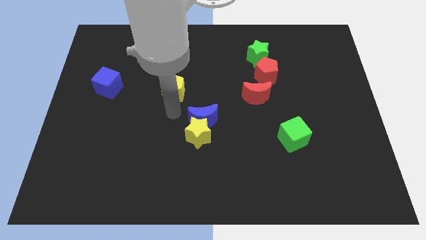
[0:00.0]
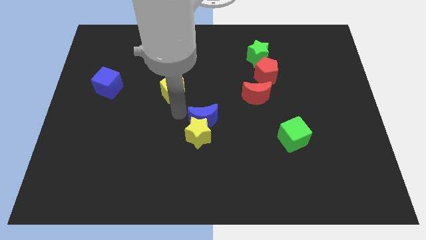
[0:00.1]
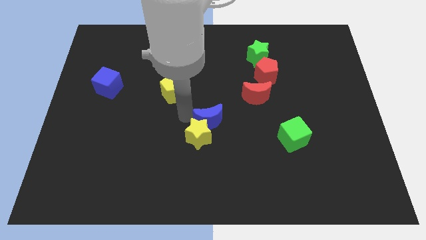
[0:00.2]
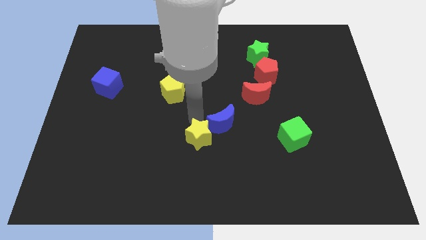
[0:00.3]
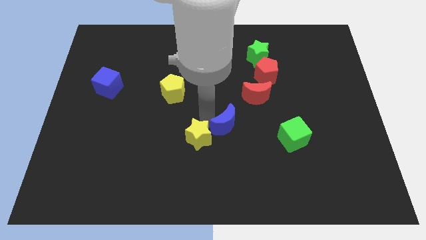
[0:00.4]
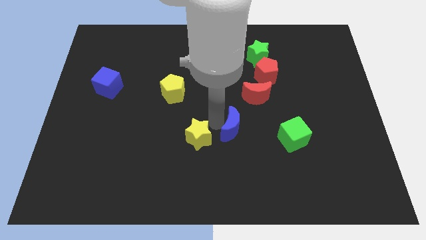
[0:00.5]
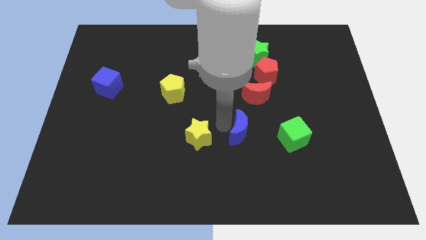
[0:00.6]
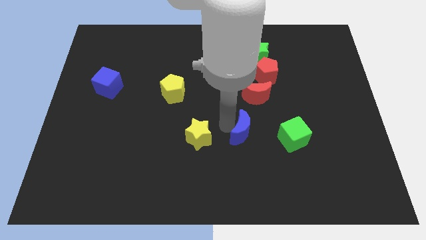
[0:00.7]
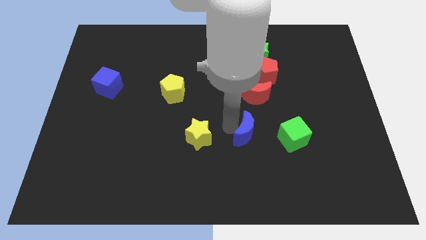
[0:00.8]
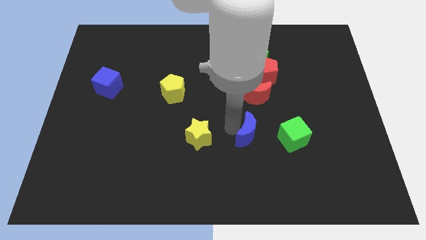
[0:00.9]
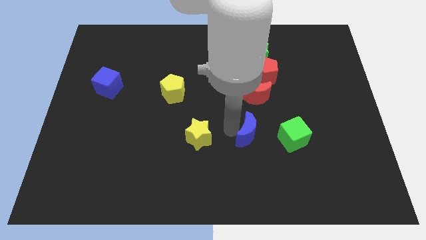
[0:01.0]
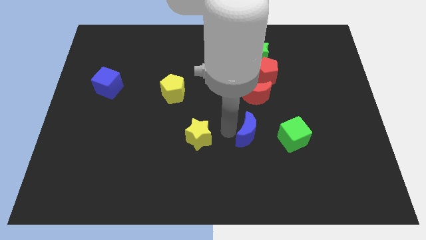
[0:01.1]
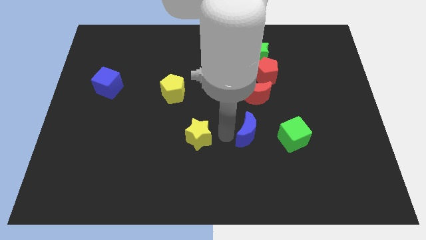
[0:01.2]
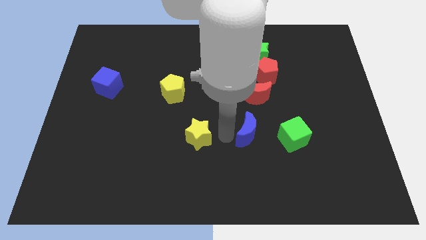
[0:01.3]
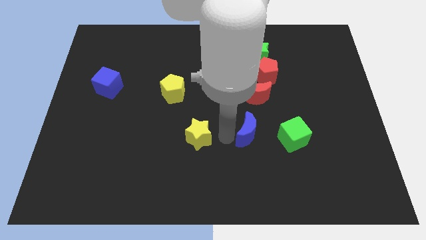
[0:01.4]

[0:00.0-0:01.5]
move the blue moon to the left of the green cube

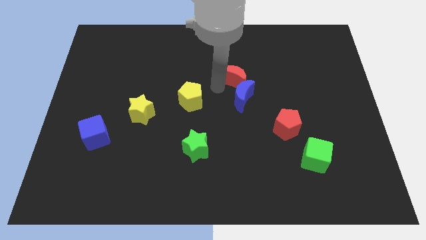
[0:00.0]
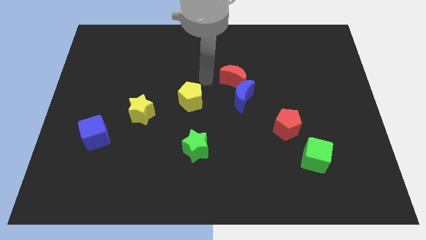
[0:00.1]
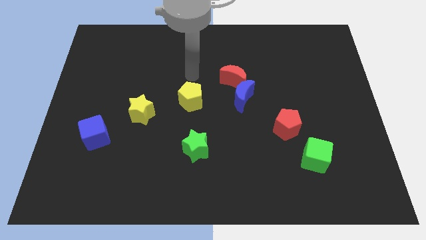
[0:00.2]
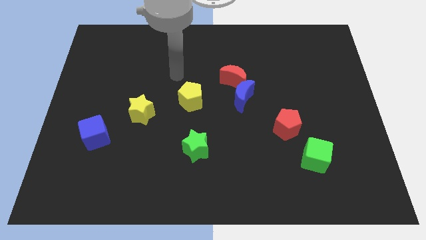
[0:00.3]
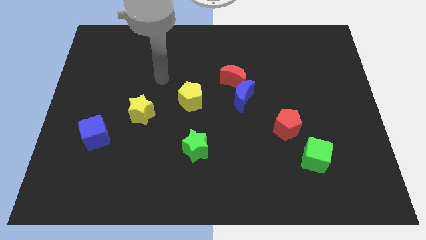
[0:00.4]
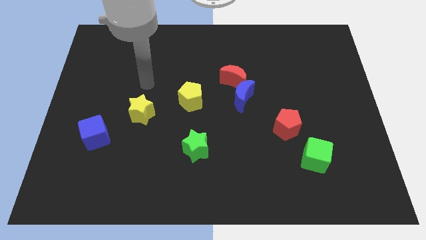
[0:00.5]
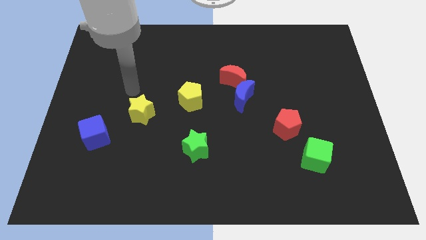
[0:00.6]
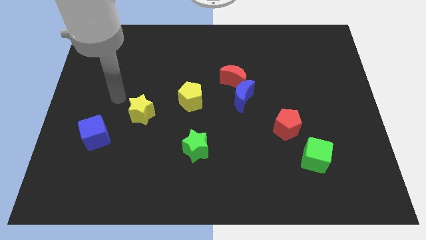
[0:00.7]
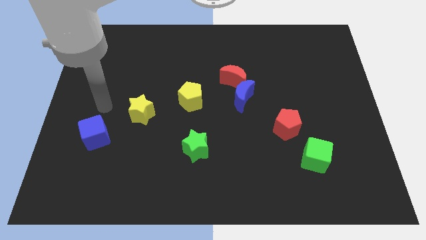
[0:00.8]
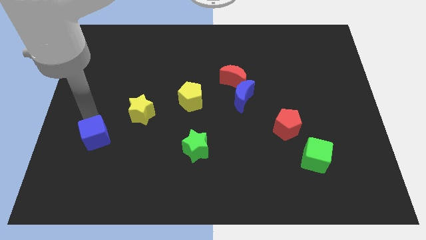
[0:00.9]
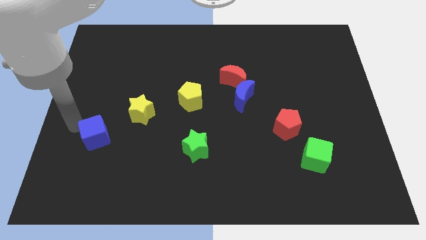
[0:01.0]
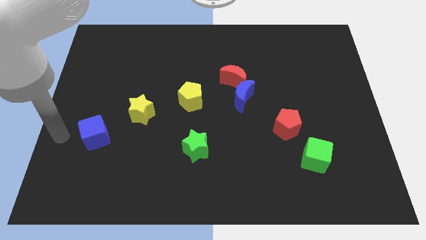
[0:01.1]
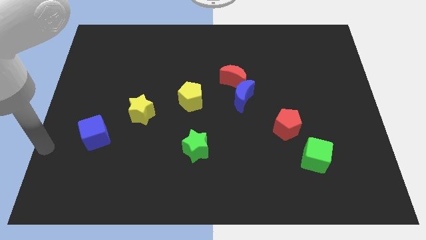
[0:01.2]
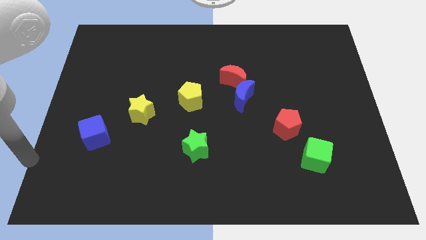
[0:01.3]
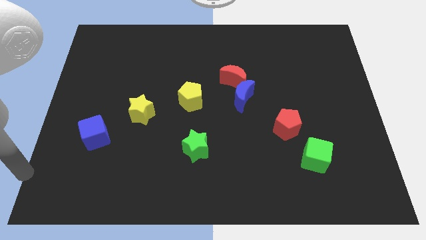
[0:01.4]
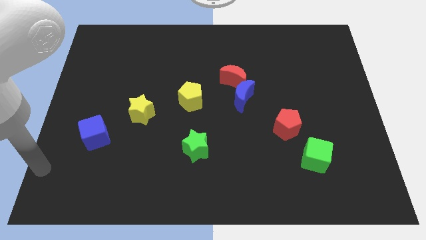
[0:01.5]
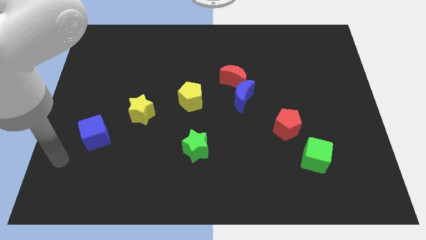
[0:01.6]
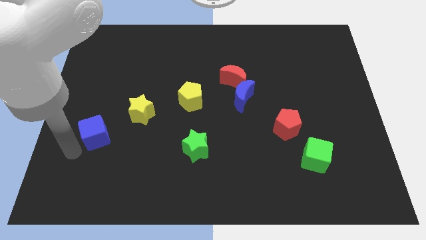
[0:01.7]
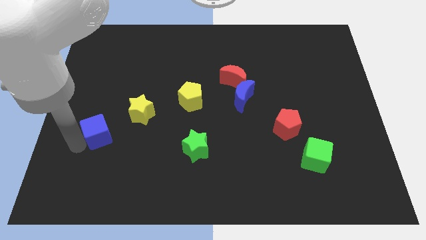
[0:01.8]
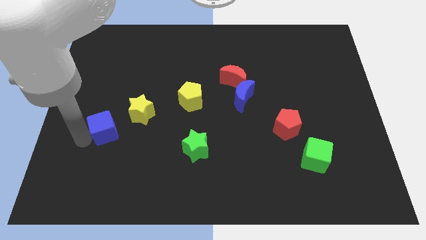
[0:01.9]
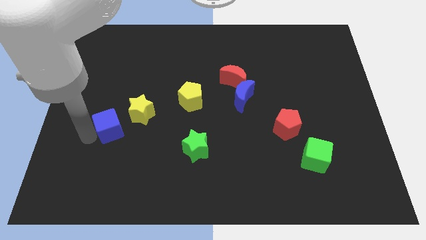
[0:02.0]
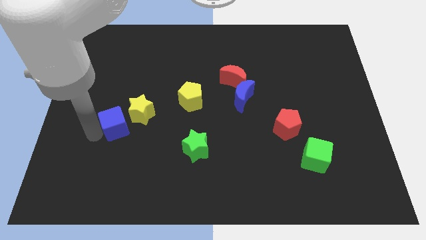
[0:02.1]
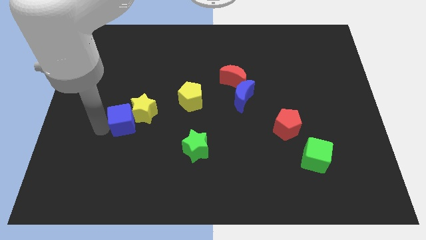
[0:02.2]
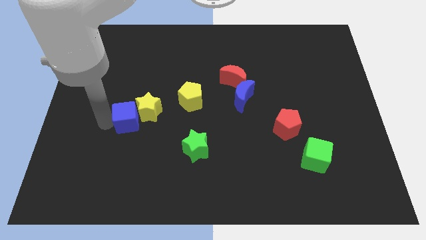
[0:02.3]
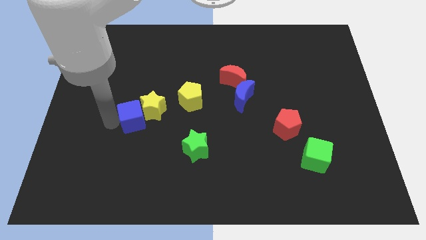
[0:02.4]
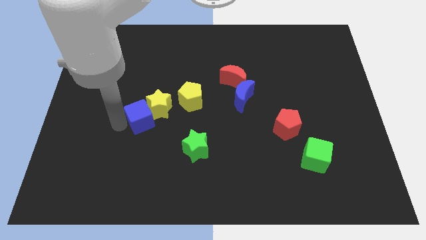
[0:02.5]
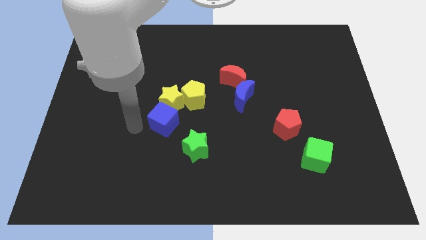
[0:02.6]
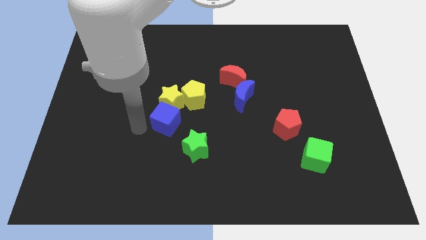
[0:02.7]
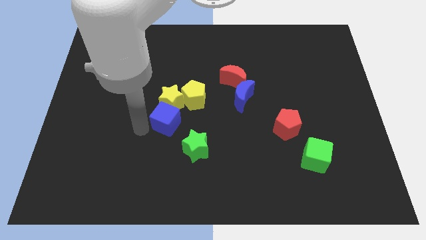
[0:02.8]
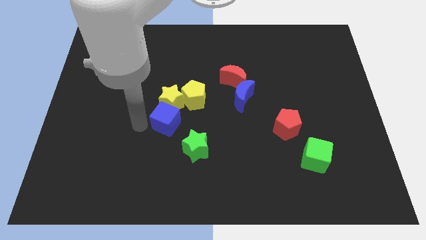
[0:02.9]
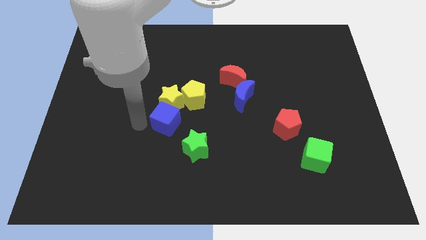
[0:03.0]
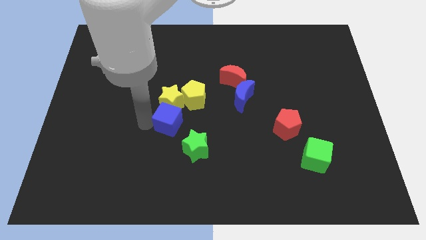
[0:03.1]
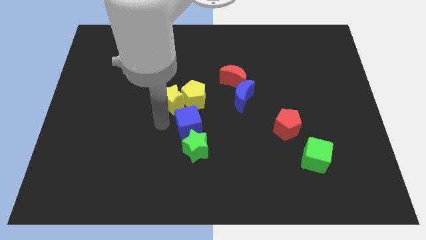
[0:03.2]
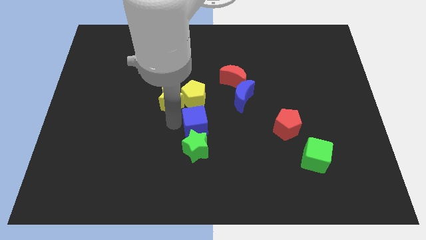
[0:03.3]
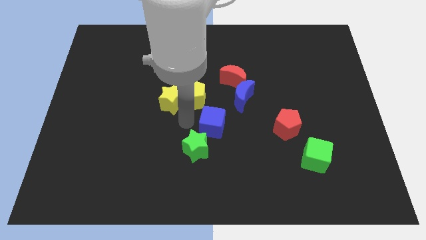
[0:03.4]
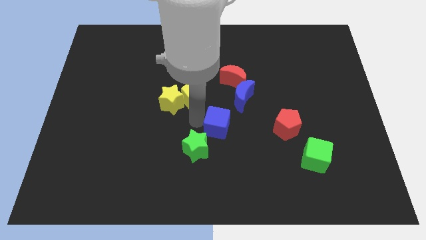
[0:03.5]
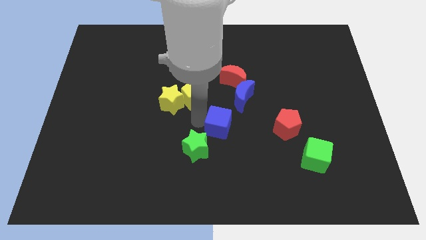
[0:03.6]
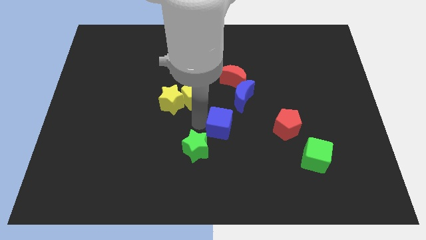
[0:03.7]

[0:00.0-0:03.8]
move the blue cube into the yellow star

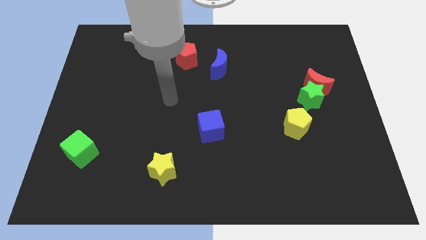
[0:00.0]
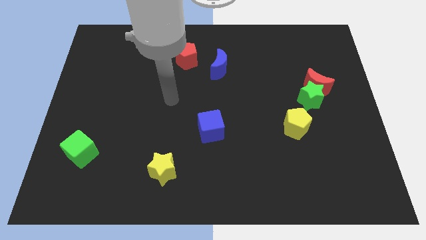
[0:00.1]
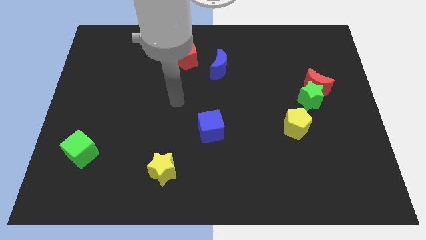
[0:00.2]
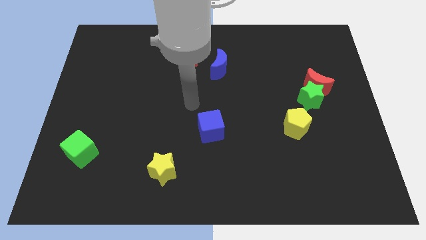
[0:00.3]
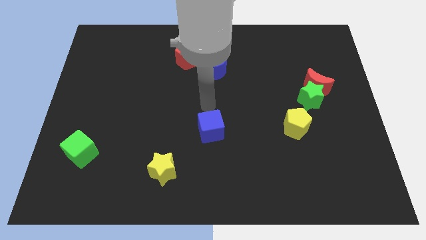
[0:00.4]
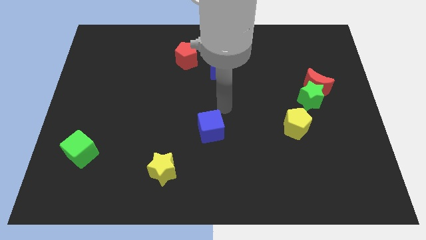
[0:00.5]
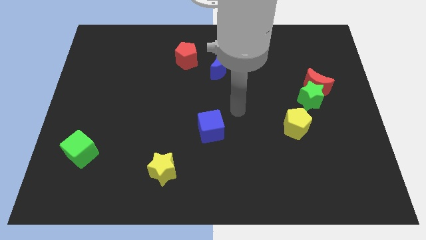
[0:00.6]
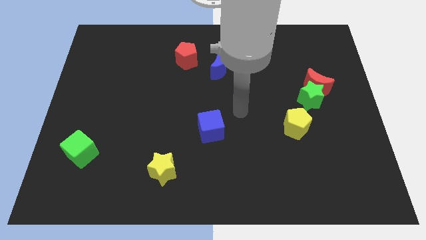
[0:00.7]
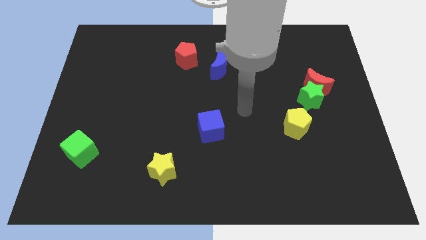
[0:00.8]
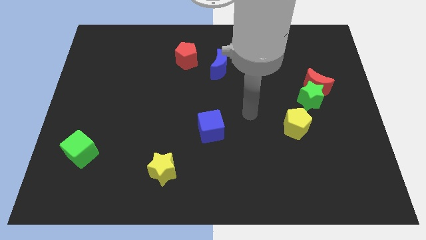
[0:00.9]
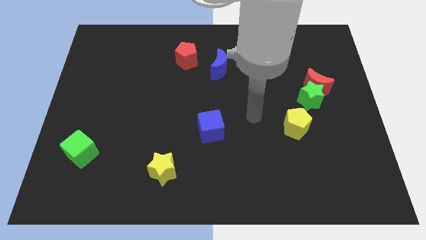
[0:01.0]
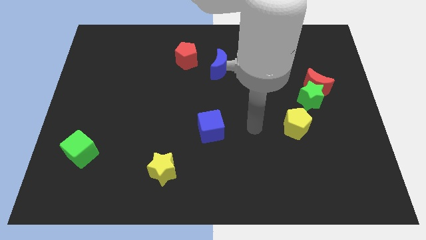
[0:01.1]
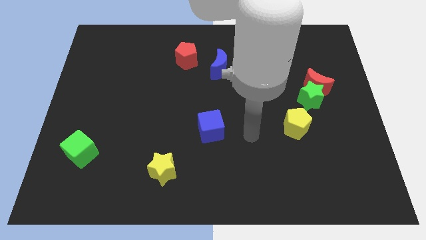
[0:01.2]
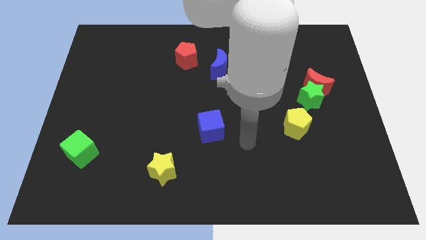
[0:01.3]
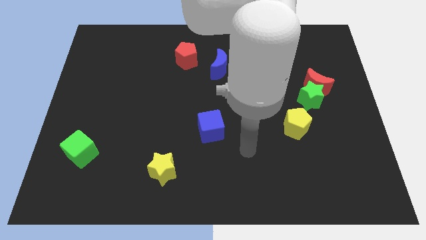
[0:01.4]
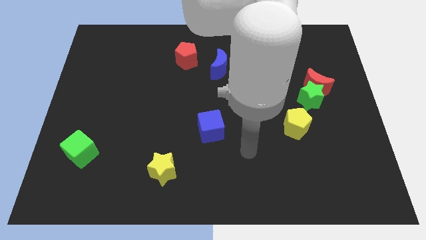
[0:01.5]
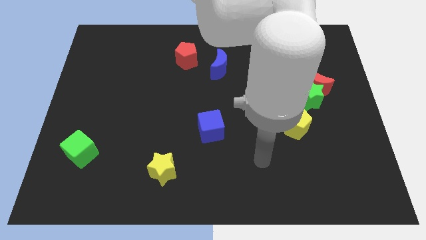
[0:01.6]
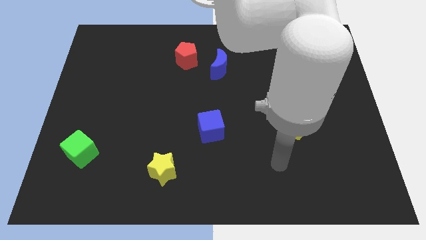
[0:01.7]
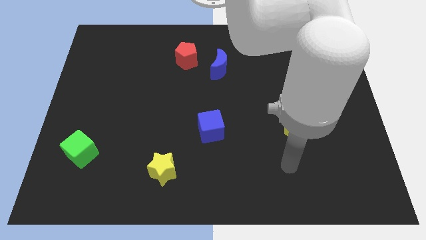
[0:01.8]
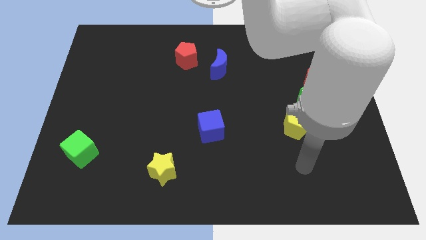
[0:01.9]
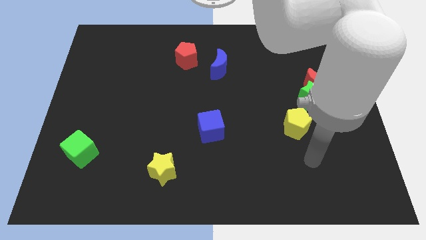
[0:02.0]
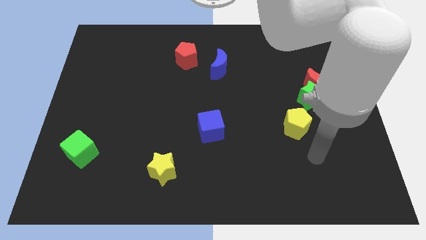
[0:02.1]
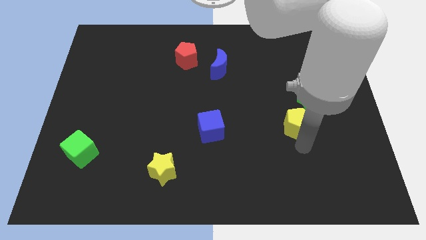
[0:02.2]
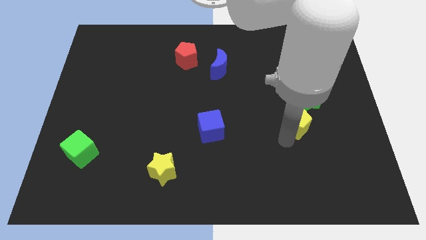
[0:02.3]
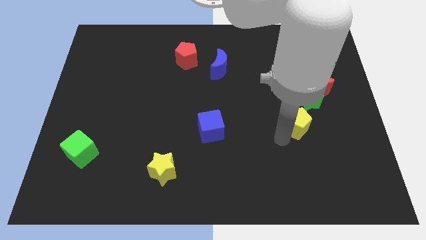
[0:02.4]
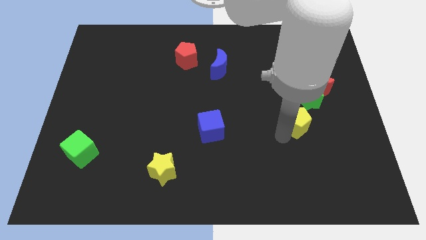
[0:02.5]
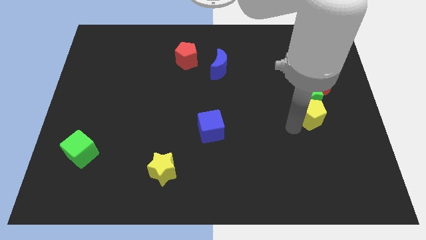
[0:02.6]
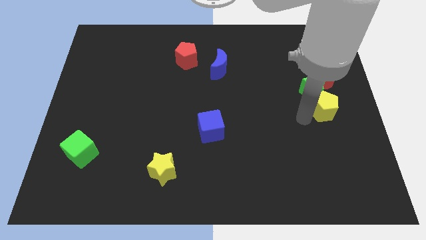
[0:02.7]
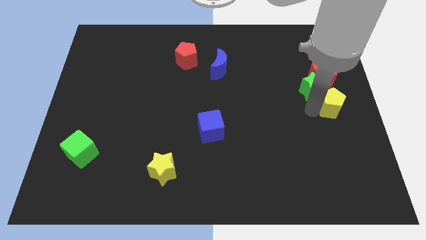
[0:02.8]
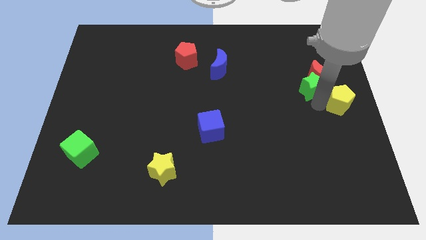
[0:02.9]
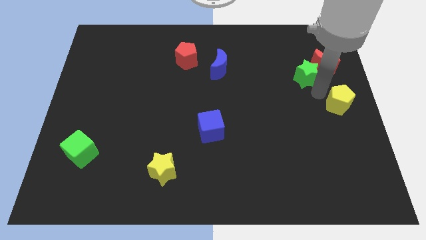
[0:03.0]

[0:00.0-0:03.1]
place the yellow pentagon to the center right side of the board

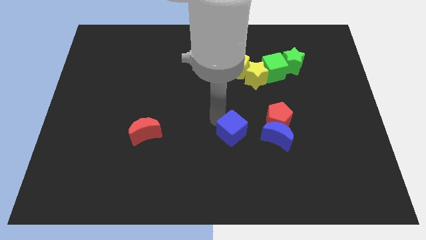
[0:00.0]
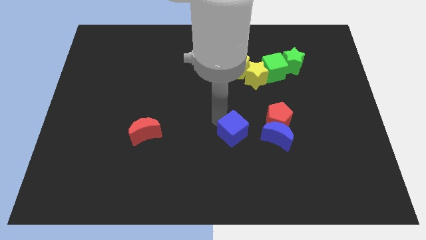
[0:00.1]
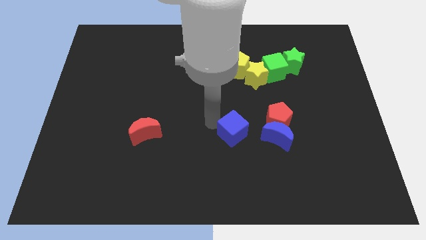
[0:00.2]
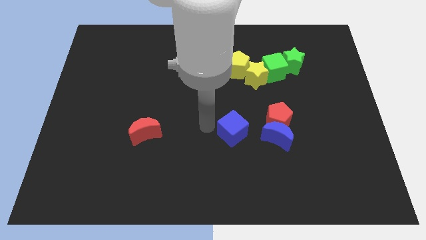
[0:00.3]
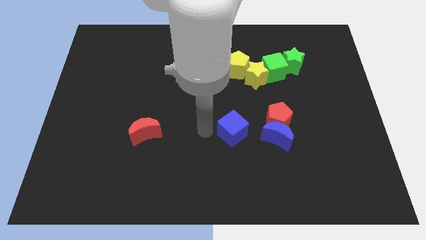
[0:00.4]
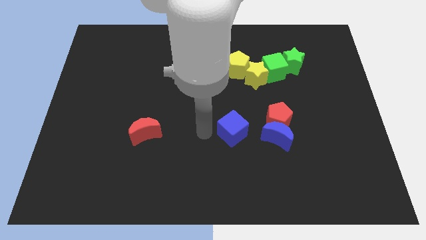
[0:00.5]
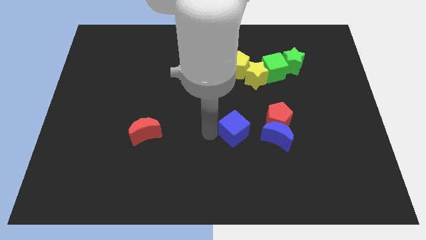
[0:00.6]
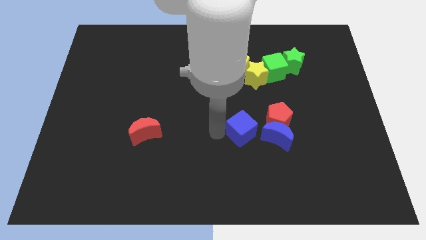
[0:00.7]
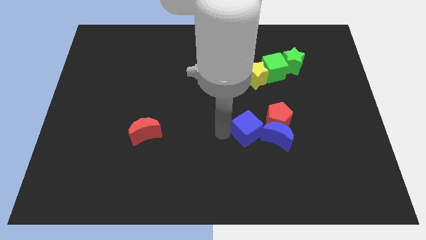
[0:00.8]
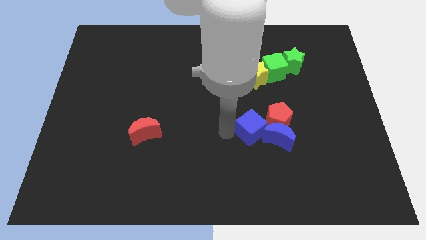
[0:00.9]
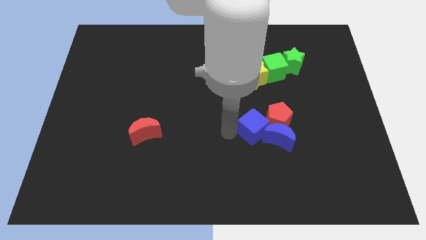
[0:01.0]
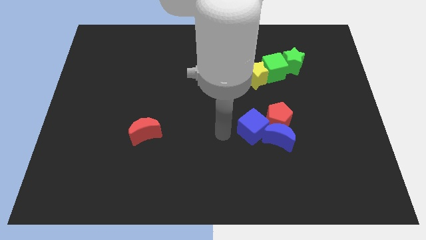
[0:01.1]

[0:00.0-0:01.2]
place blue cube to the left side of blue moon
